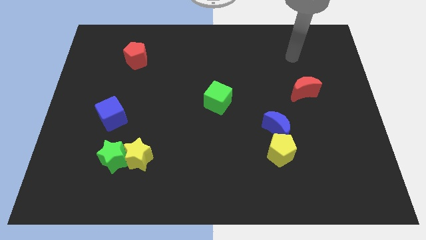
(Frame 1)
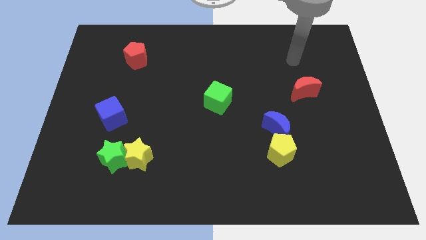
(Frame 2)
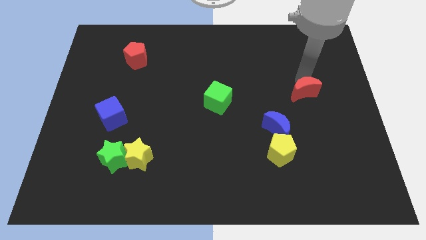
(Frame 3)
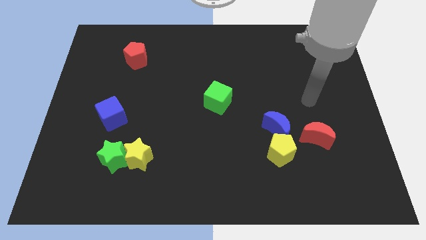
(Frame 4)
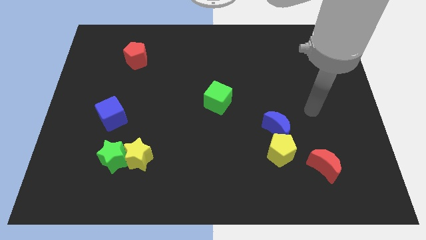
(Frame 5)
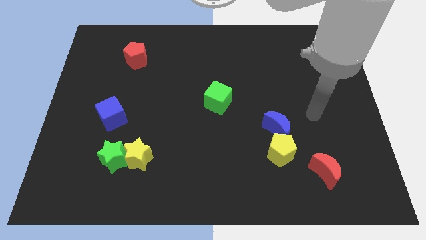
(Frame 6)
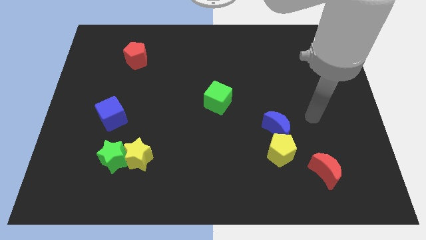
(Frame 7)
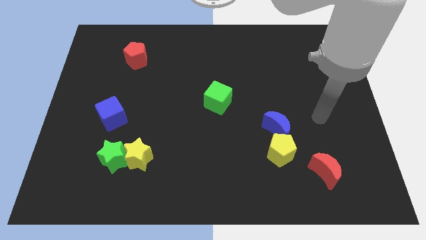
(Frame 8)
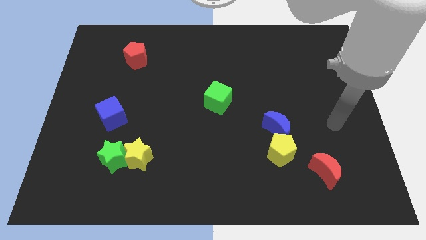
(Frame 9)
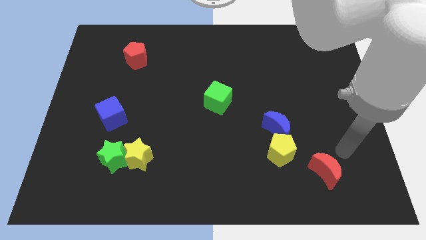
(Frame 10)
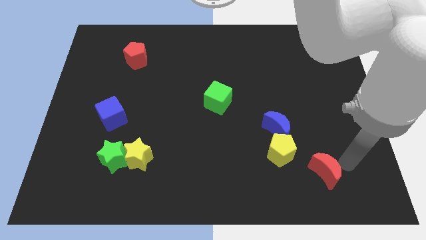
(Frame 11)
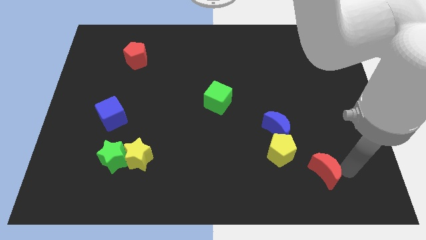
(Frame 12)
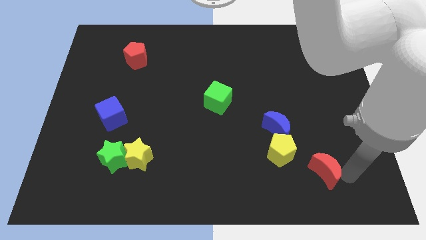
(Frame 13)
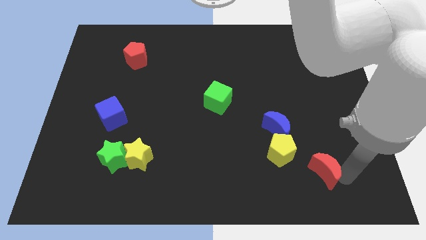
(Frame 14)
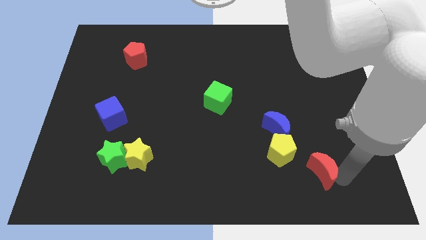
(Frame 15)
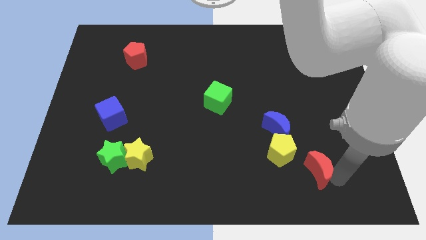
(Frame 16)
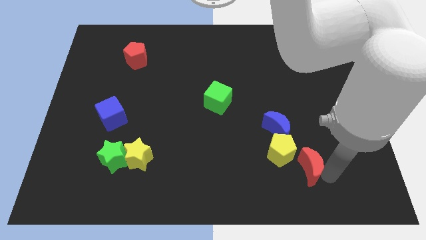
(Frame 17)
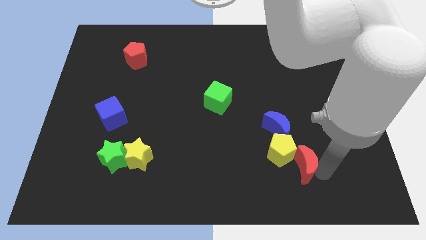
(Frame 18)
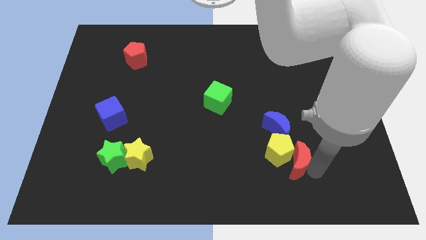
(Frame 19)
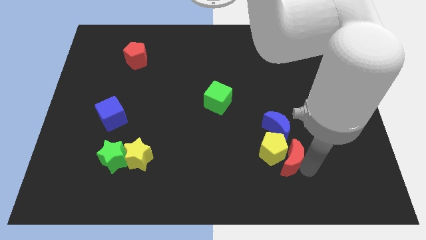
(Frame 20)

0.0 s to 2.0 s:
put the red moon towards the yellow pentagon

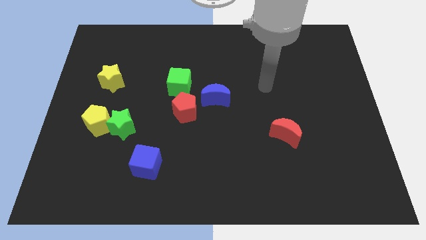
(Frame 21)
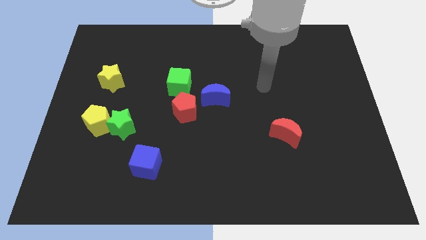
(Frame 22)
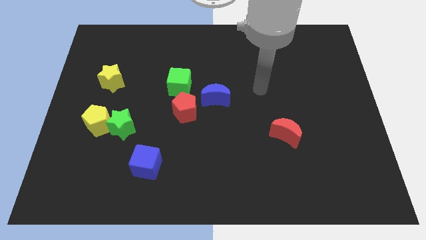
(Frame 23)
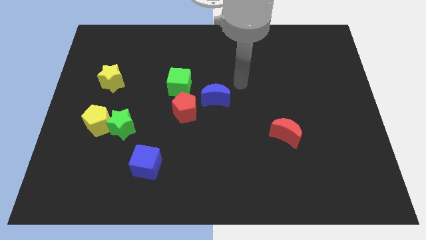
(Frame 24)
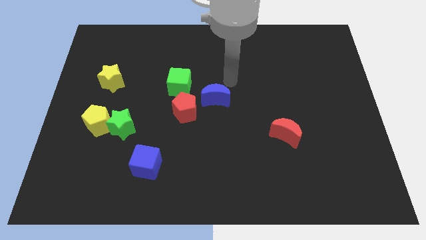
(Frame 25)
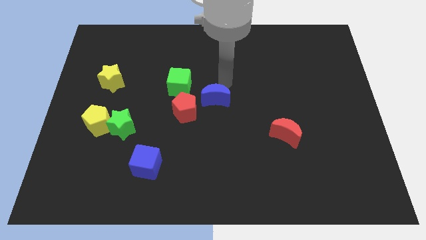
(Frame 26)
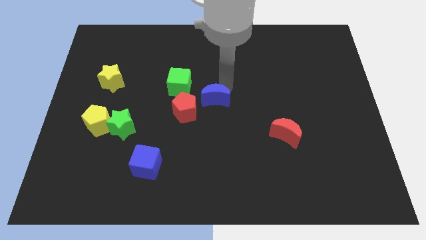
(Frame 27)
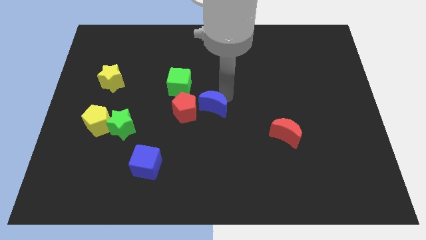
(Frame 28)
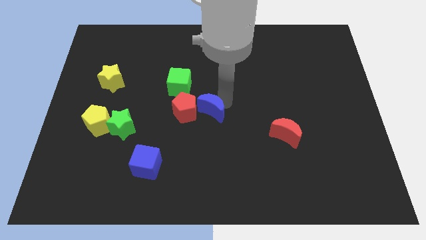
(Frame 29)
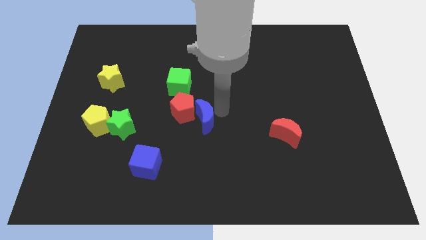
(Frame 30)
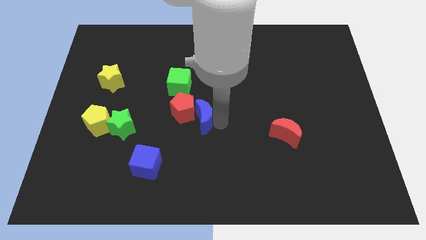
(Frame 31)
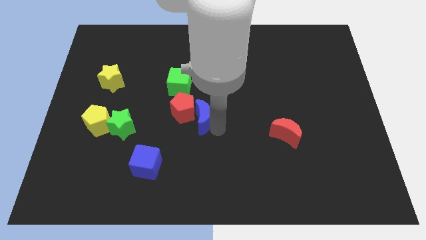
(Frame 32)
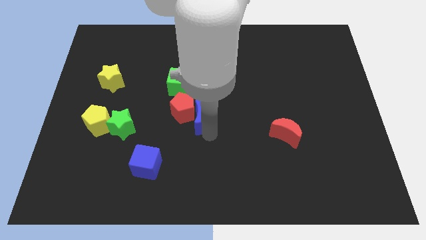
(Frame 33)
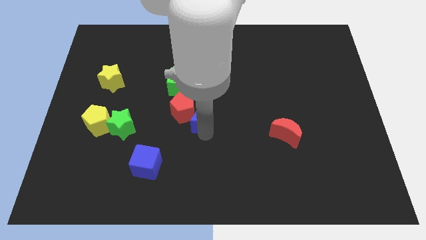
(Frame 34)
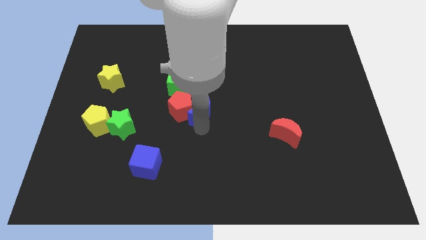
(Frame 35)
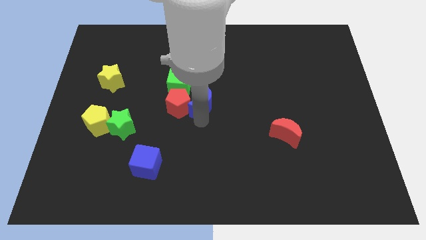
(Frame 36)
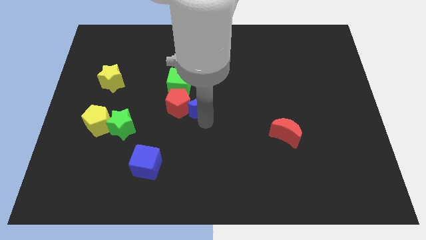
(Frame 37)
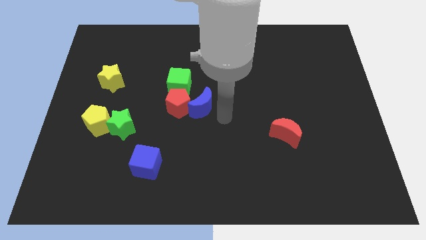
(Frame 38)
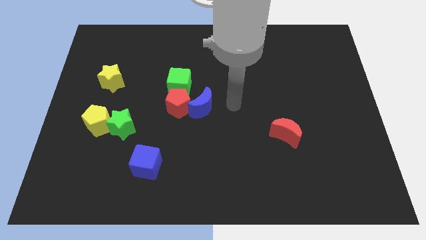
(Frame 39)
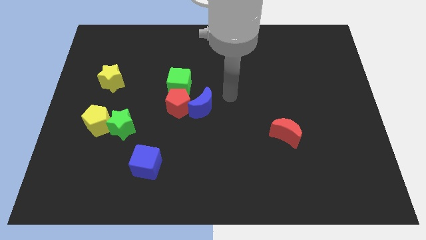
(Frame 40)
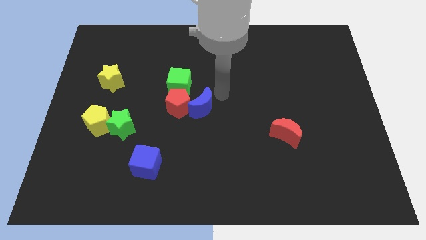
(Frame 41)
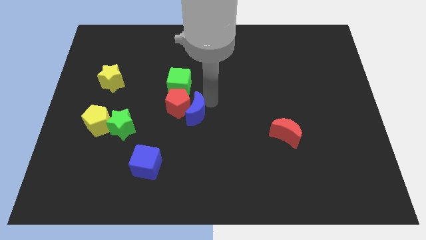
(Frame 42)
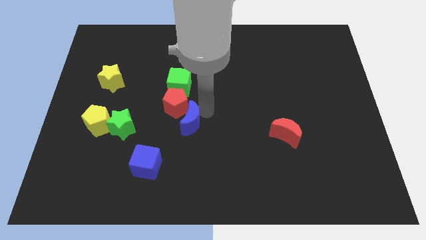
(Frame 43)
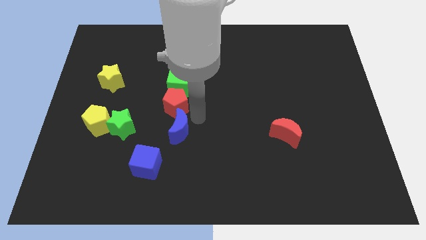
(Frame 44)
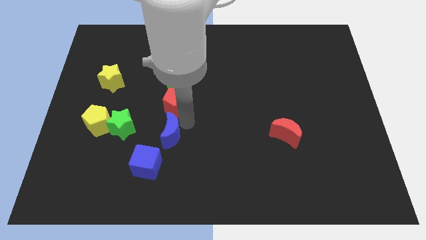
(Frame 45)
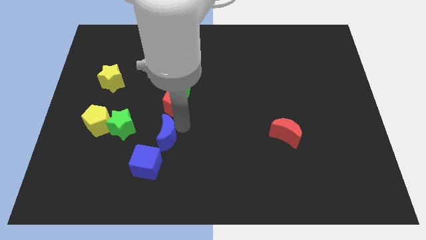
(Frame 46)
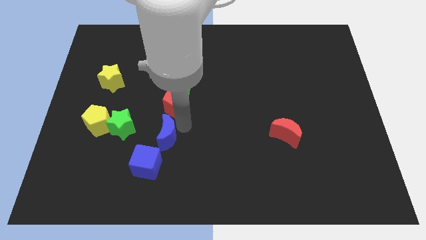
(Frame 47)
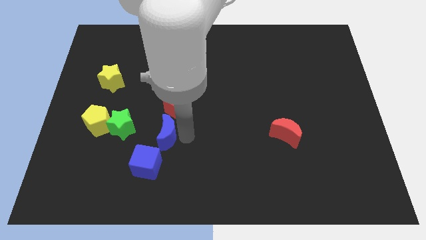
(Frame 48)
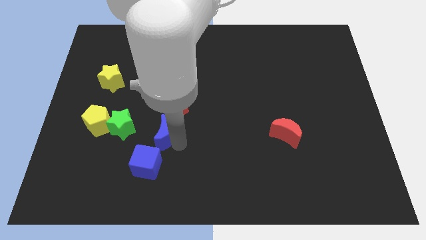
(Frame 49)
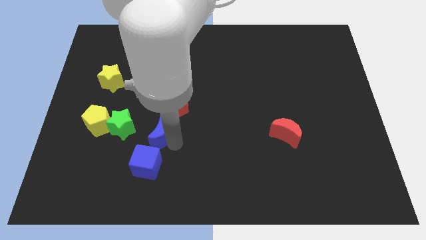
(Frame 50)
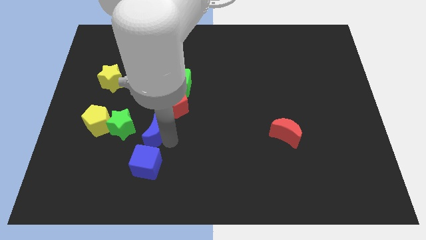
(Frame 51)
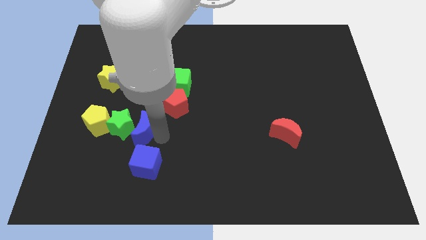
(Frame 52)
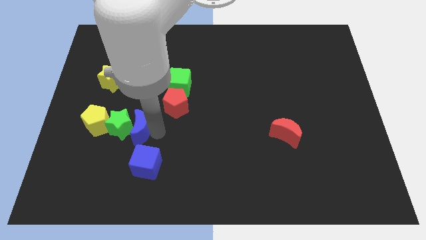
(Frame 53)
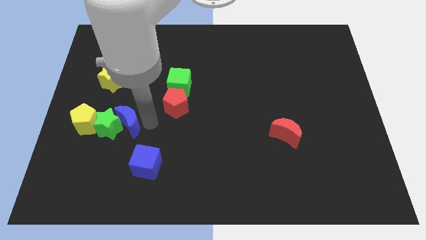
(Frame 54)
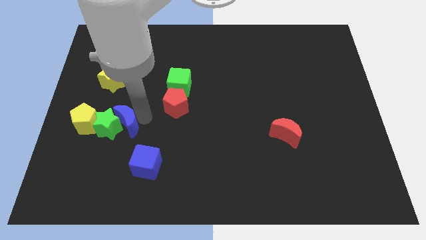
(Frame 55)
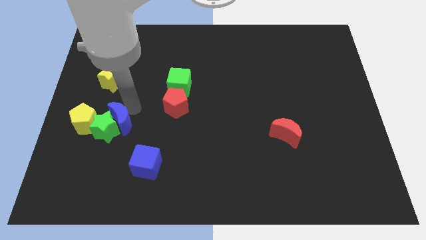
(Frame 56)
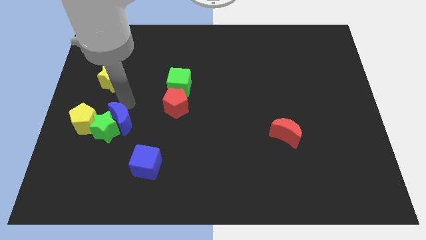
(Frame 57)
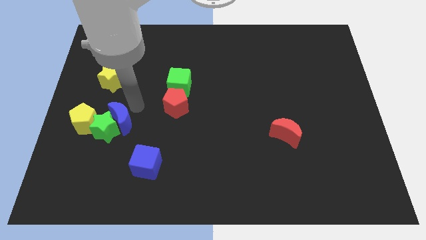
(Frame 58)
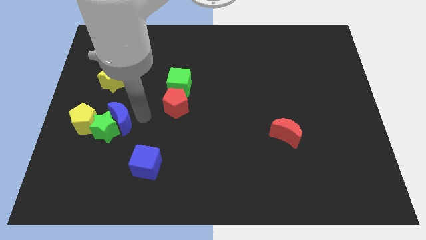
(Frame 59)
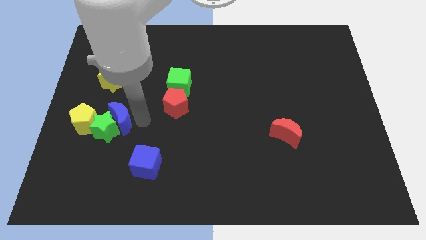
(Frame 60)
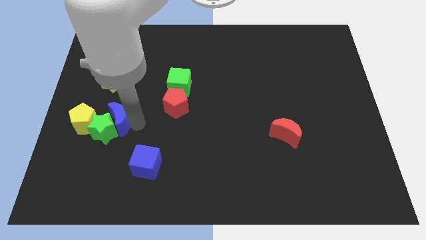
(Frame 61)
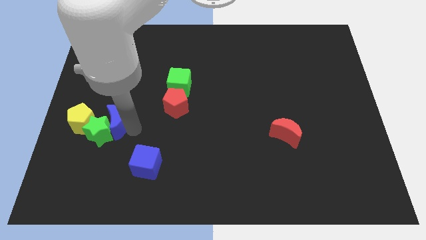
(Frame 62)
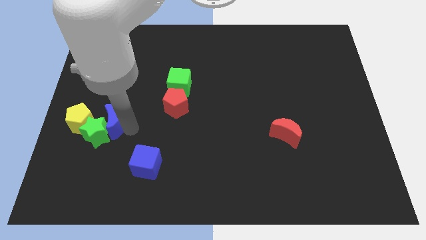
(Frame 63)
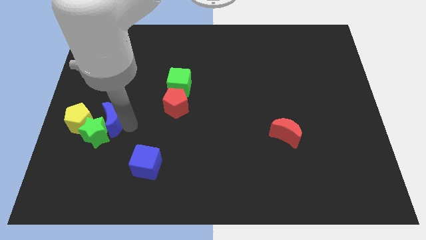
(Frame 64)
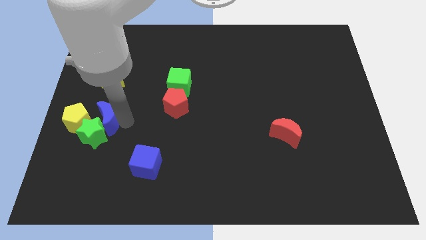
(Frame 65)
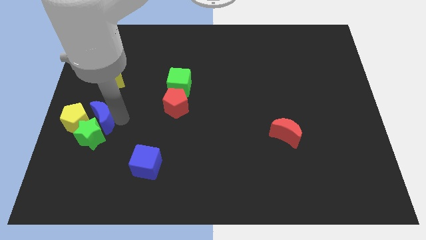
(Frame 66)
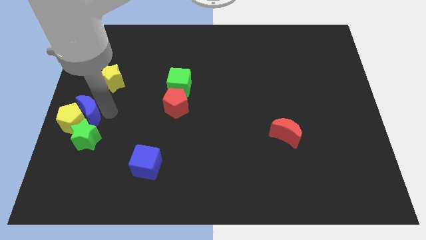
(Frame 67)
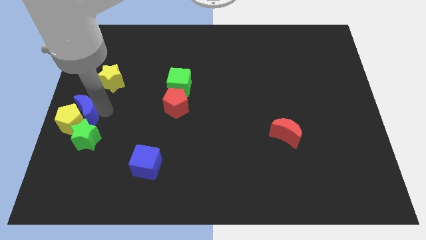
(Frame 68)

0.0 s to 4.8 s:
push the blue moon close to the yellow pentagon

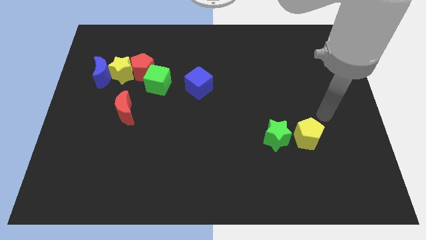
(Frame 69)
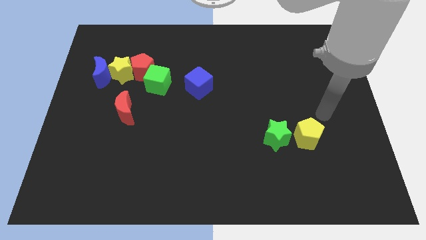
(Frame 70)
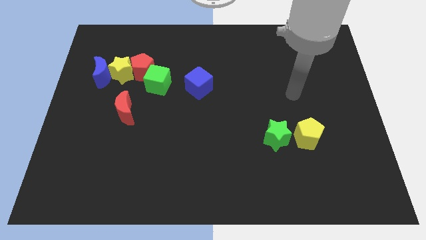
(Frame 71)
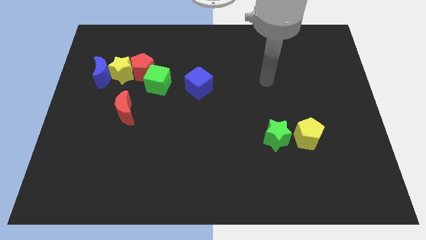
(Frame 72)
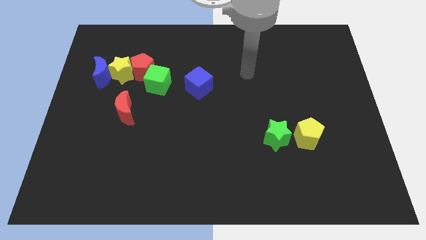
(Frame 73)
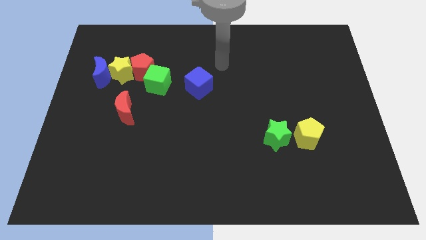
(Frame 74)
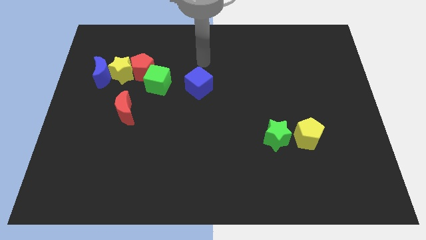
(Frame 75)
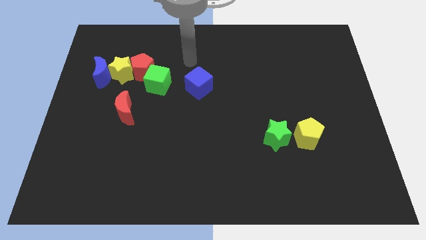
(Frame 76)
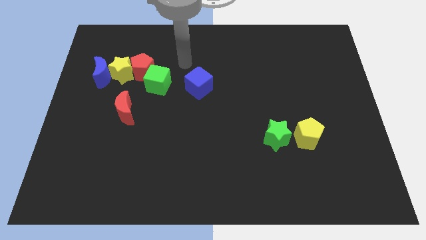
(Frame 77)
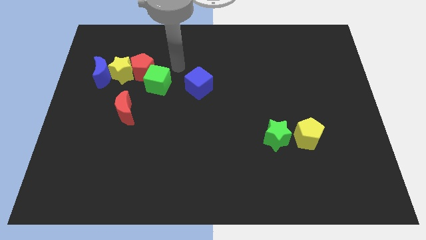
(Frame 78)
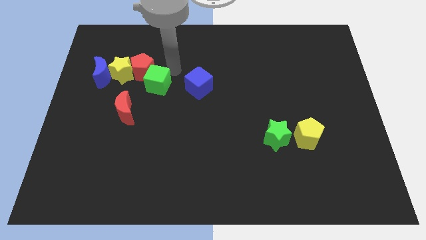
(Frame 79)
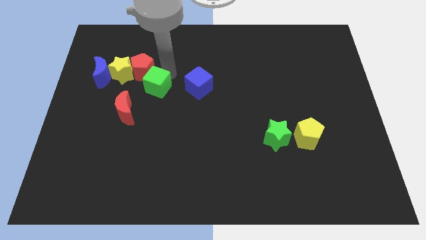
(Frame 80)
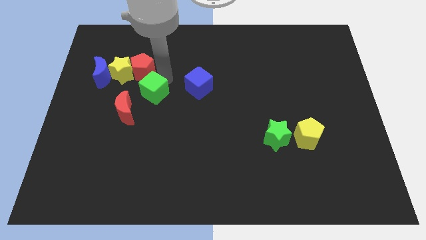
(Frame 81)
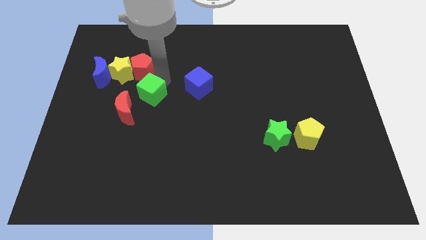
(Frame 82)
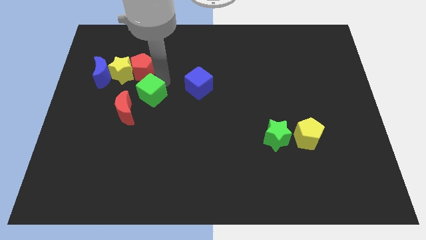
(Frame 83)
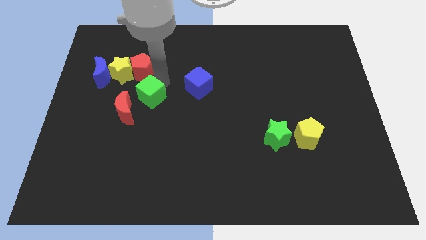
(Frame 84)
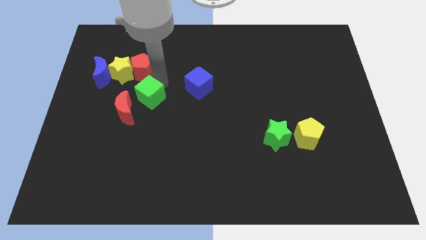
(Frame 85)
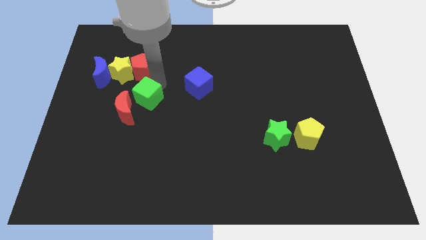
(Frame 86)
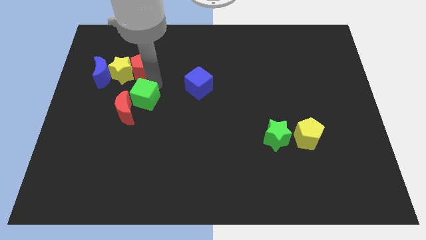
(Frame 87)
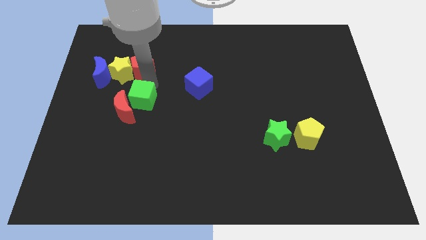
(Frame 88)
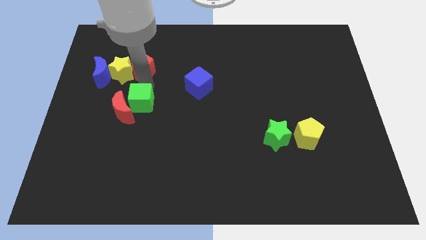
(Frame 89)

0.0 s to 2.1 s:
push the green cube next to the red moon
